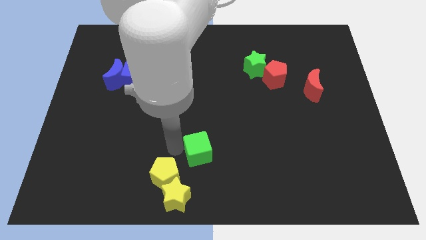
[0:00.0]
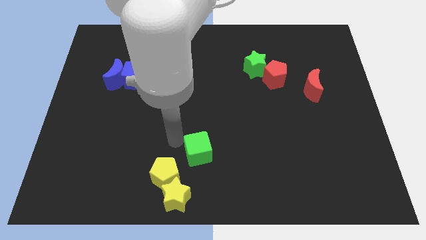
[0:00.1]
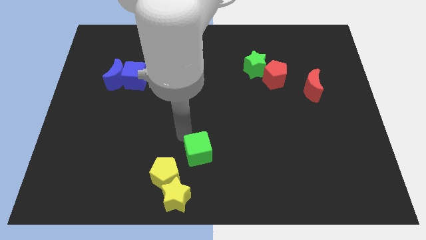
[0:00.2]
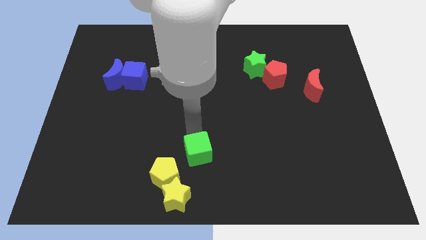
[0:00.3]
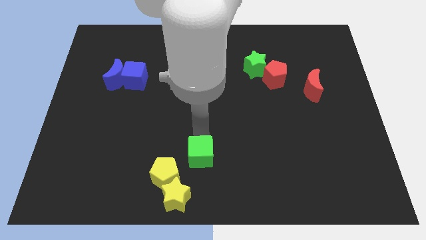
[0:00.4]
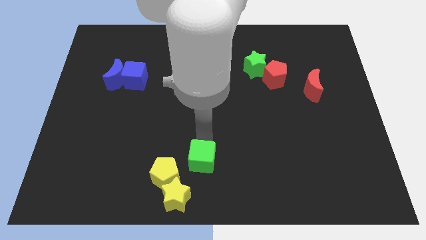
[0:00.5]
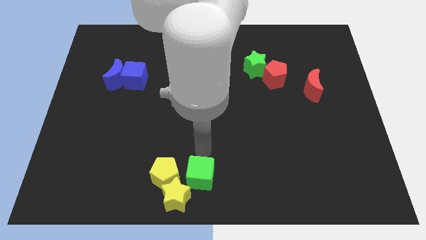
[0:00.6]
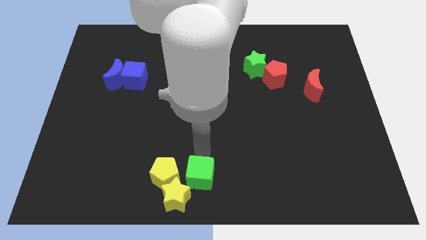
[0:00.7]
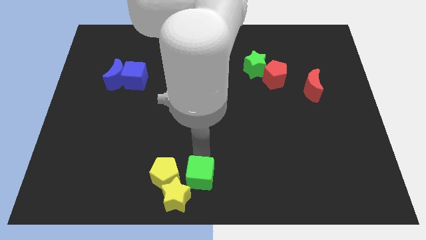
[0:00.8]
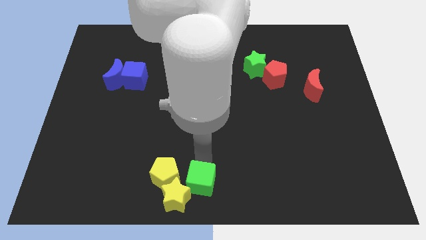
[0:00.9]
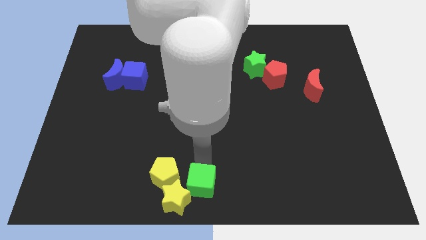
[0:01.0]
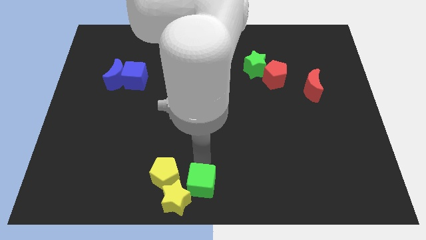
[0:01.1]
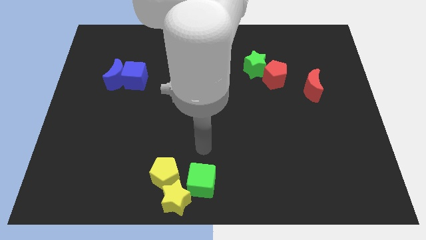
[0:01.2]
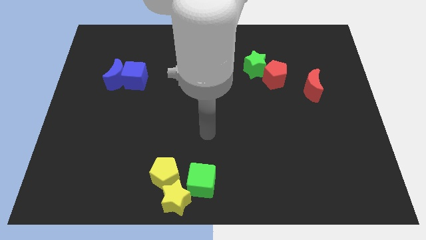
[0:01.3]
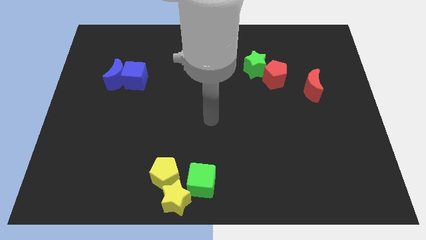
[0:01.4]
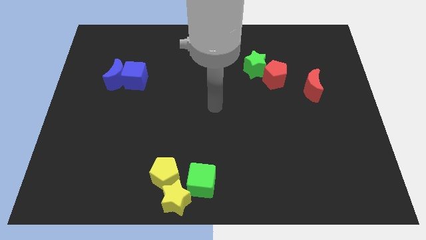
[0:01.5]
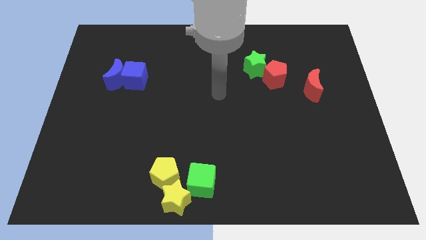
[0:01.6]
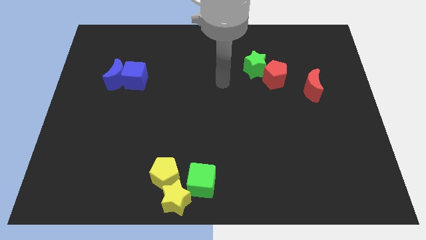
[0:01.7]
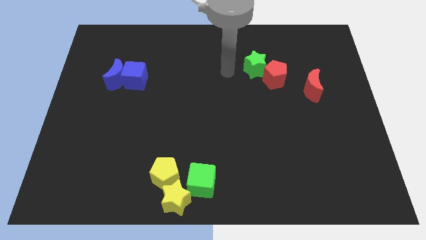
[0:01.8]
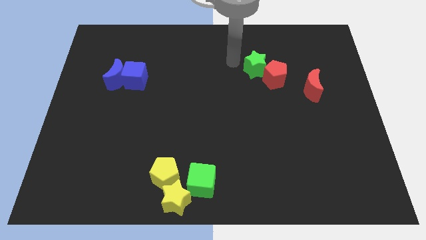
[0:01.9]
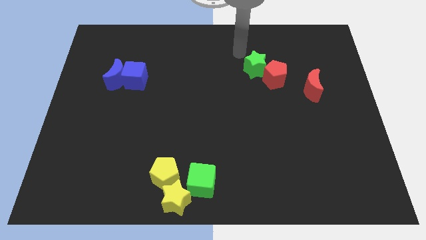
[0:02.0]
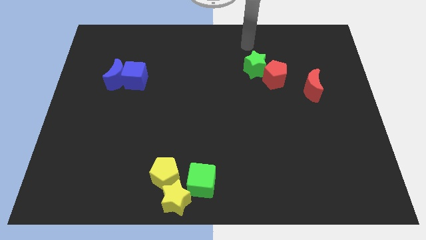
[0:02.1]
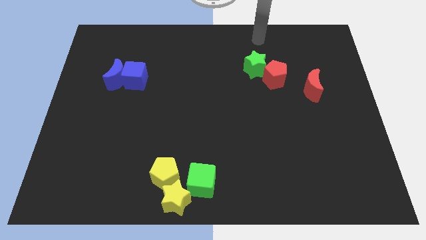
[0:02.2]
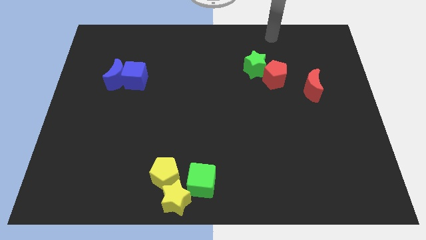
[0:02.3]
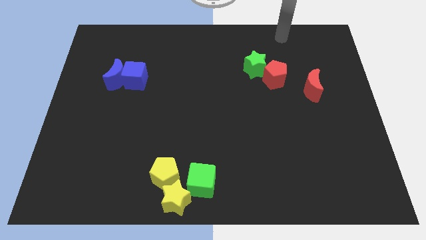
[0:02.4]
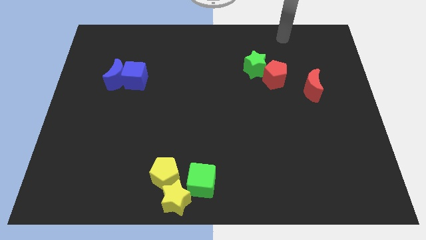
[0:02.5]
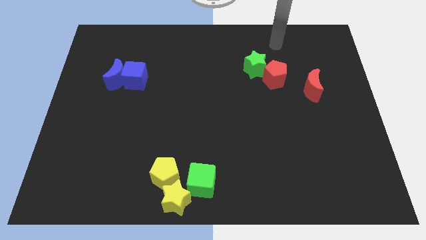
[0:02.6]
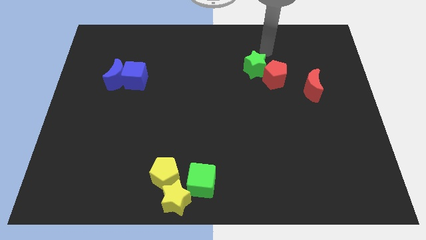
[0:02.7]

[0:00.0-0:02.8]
move your arm away from the green cube

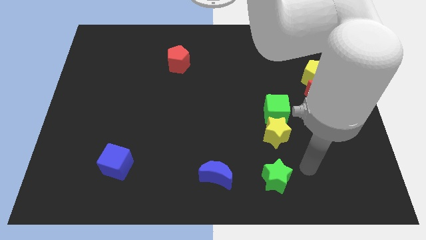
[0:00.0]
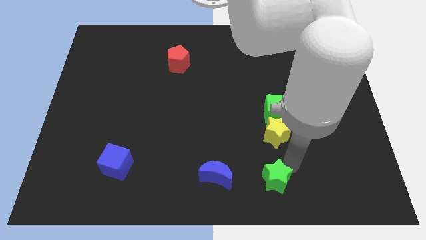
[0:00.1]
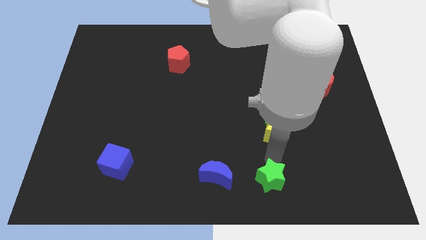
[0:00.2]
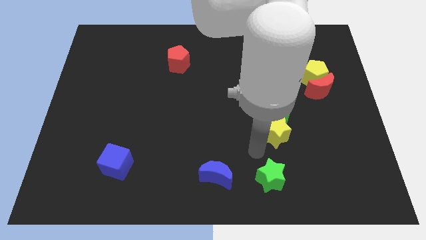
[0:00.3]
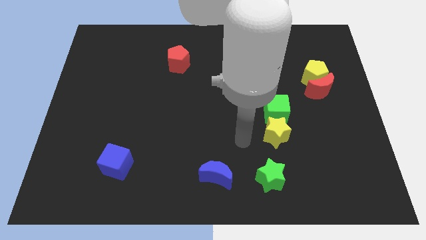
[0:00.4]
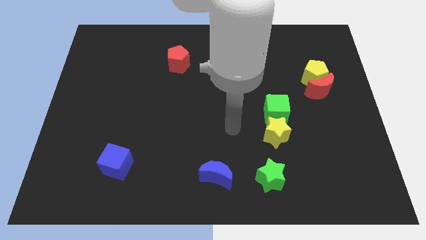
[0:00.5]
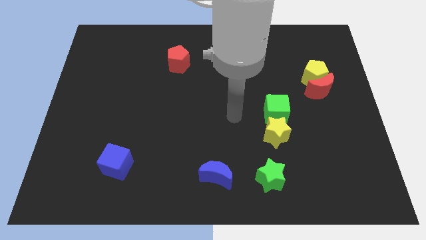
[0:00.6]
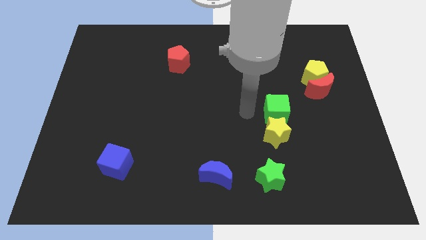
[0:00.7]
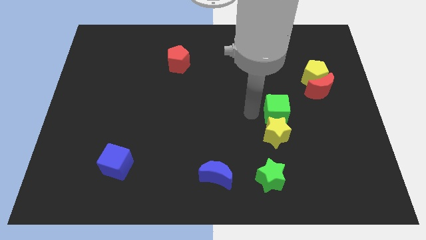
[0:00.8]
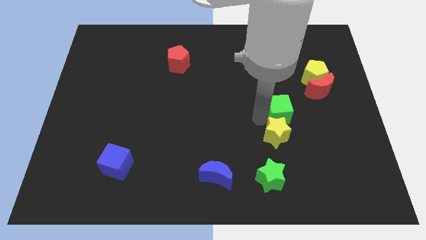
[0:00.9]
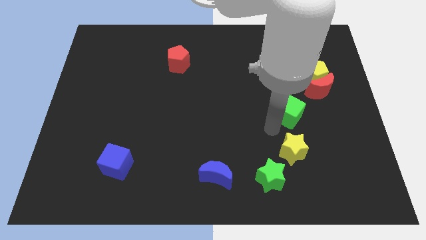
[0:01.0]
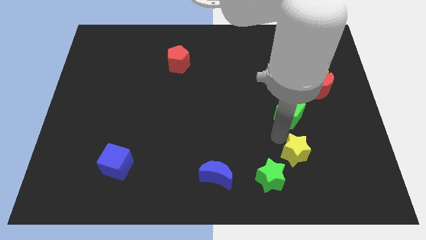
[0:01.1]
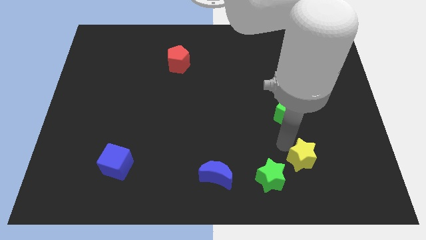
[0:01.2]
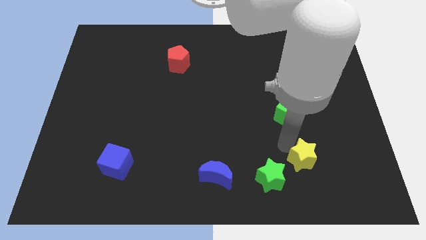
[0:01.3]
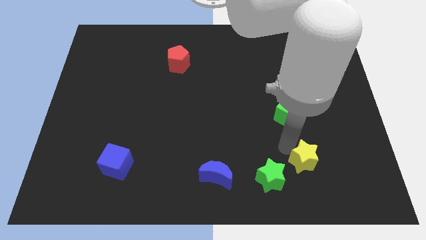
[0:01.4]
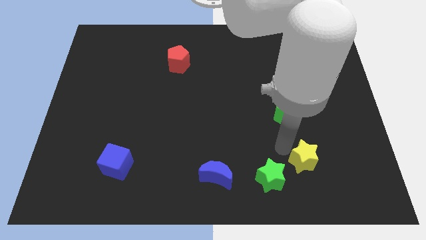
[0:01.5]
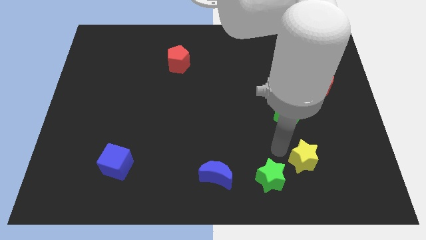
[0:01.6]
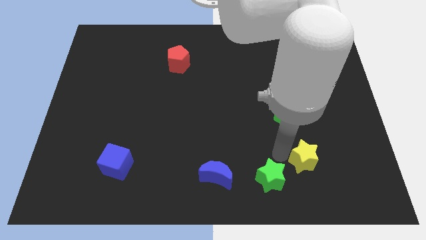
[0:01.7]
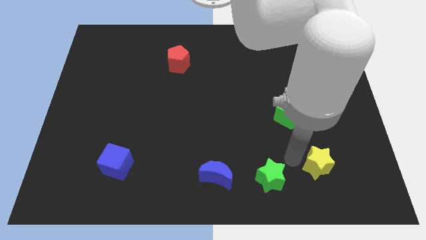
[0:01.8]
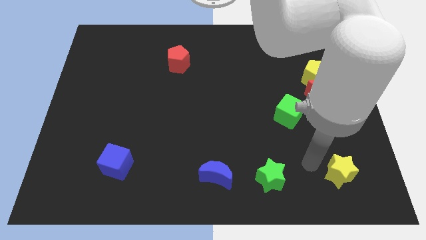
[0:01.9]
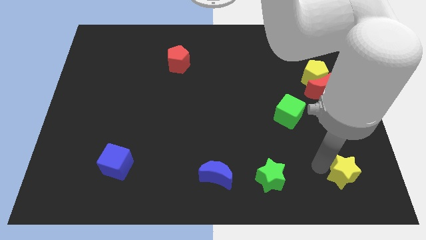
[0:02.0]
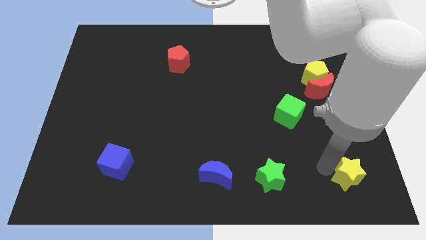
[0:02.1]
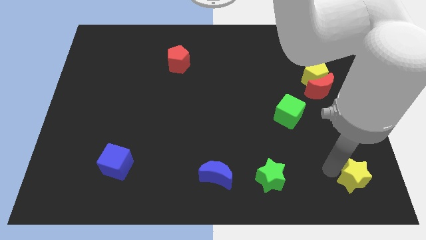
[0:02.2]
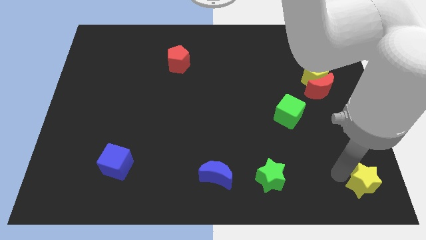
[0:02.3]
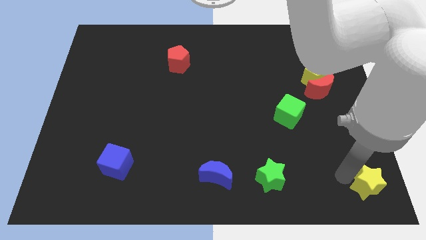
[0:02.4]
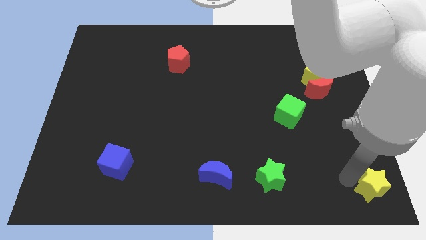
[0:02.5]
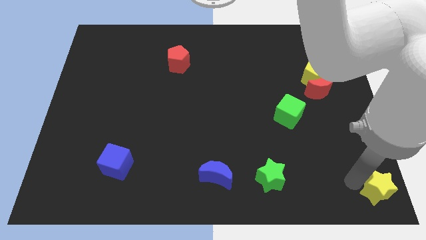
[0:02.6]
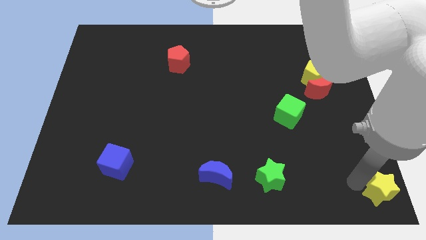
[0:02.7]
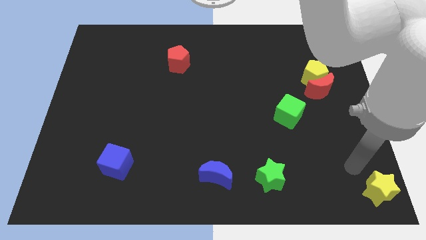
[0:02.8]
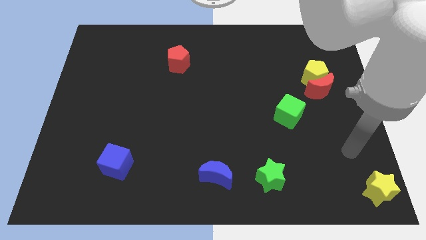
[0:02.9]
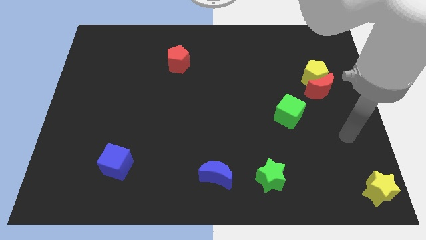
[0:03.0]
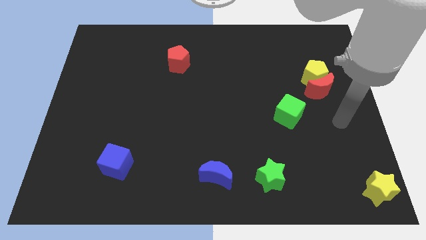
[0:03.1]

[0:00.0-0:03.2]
move the yellow star to the bottom right of the table

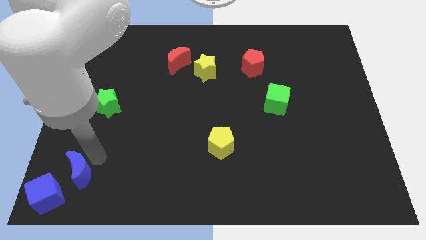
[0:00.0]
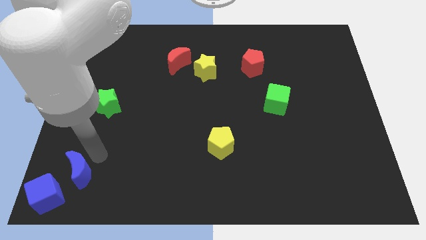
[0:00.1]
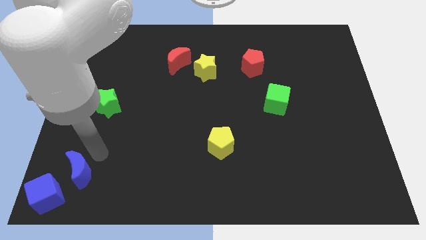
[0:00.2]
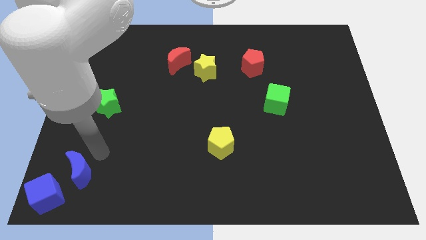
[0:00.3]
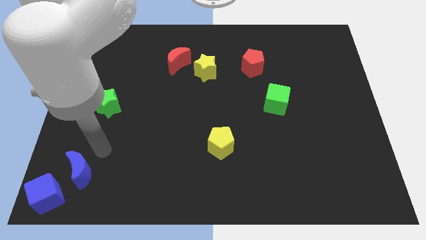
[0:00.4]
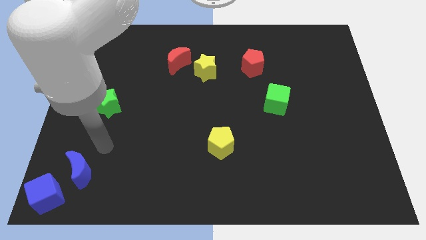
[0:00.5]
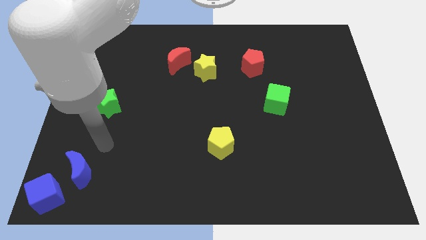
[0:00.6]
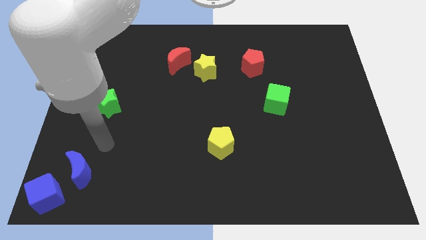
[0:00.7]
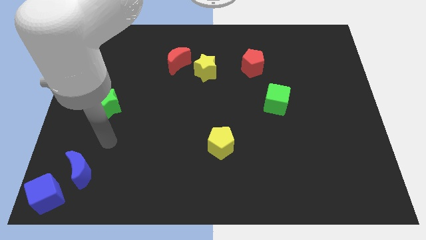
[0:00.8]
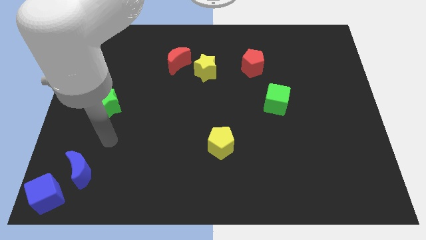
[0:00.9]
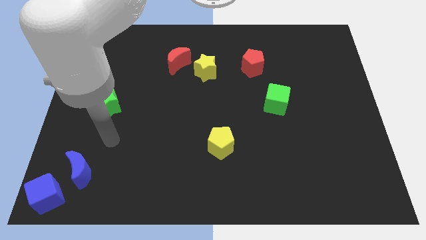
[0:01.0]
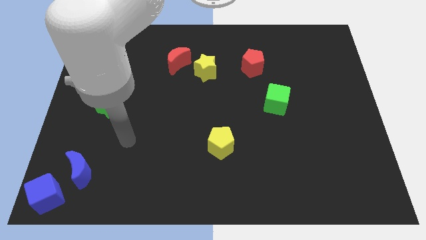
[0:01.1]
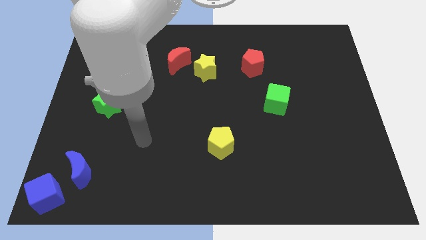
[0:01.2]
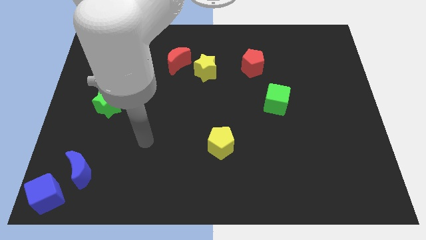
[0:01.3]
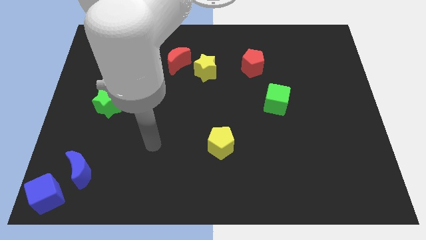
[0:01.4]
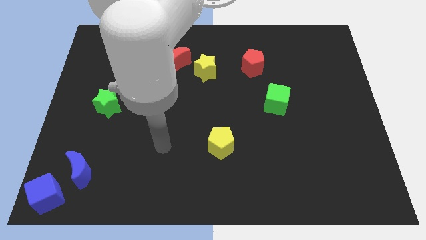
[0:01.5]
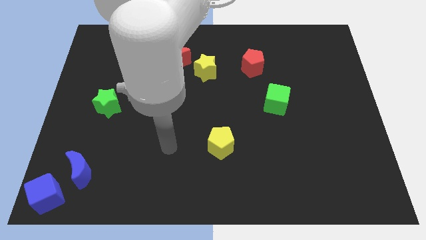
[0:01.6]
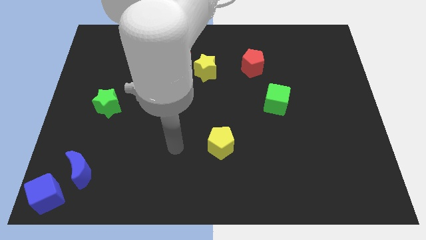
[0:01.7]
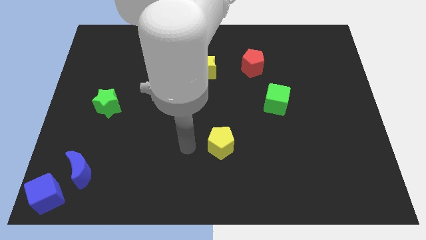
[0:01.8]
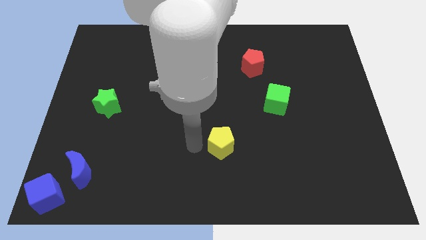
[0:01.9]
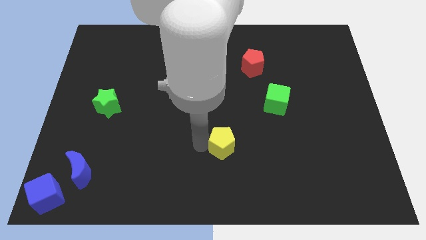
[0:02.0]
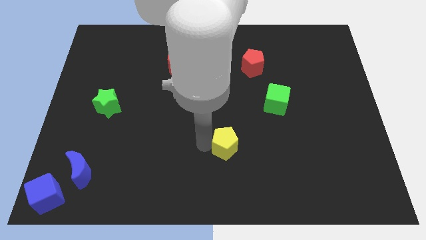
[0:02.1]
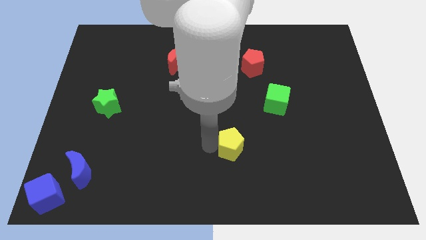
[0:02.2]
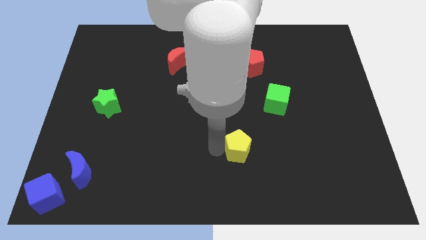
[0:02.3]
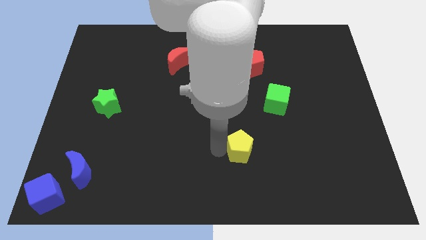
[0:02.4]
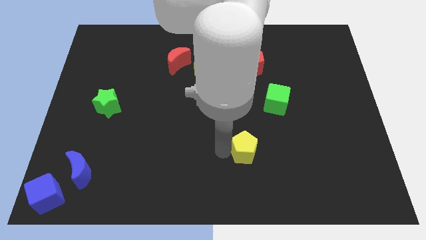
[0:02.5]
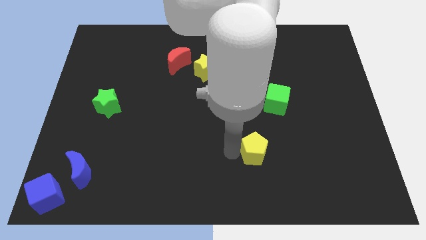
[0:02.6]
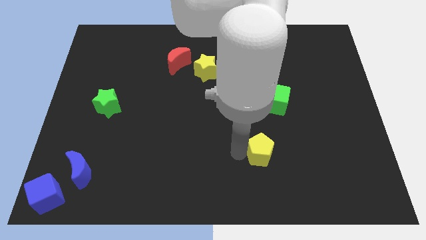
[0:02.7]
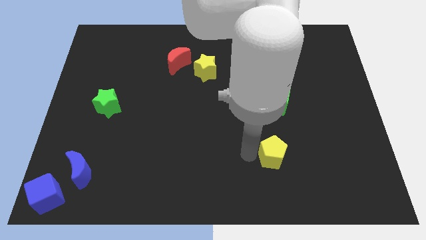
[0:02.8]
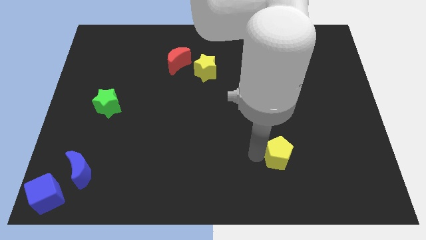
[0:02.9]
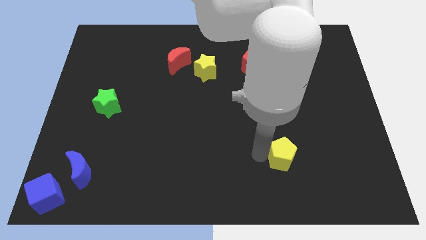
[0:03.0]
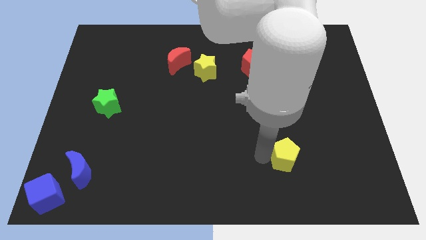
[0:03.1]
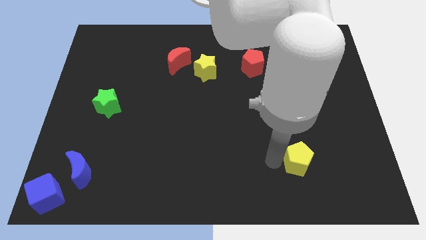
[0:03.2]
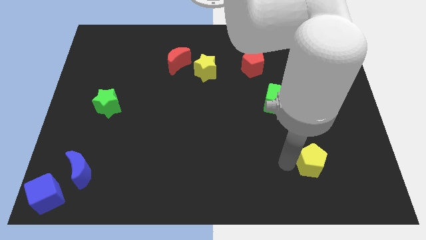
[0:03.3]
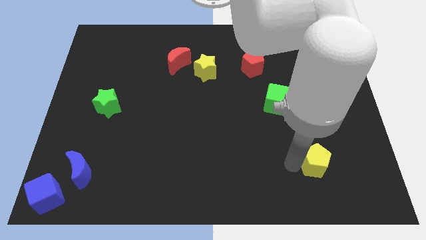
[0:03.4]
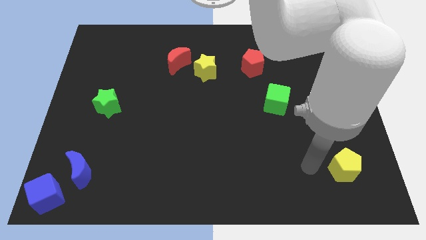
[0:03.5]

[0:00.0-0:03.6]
move the yellow pentagon diagonally bottom right to the green cube
